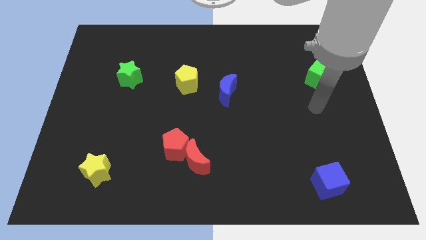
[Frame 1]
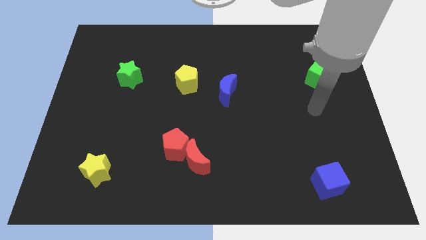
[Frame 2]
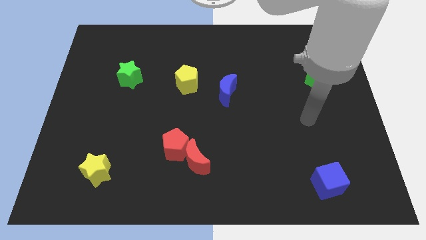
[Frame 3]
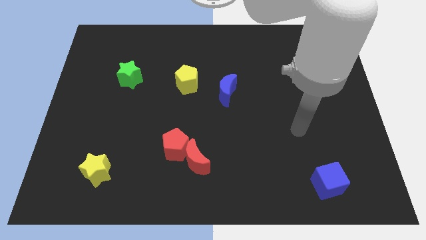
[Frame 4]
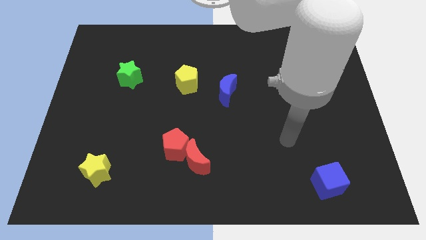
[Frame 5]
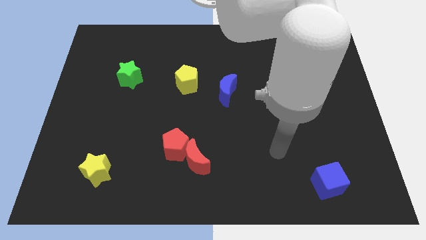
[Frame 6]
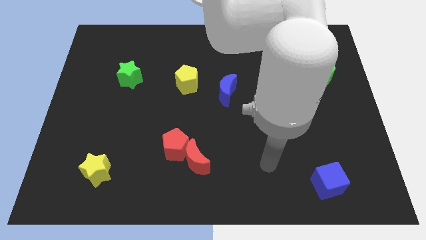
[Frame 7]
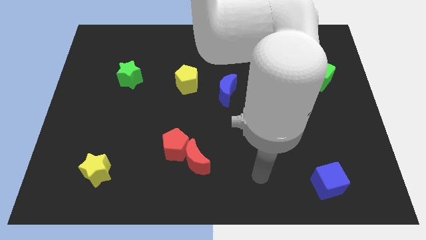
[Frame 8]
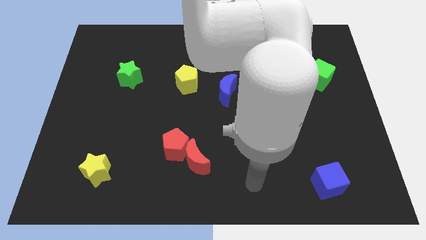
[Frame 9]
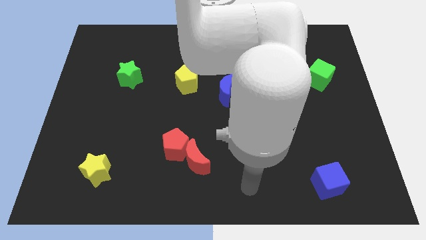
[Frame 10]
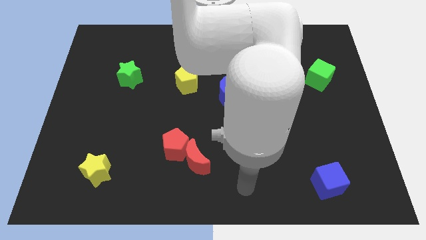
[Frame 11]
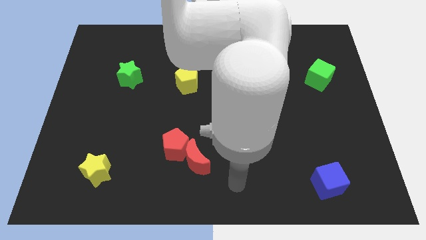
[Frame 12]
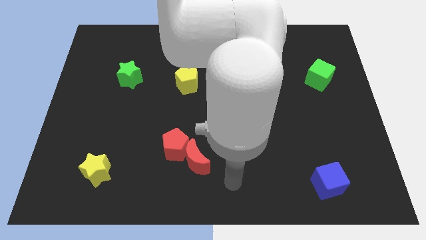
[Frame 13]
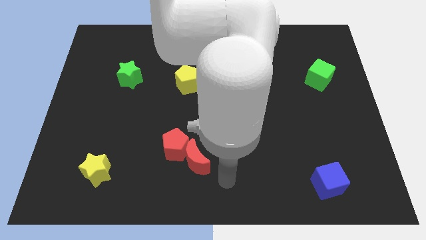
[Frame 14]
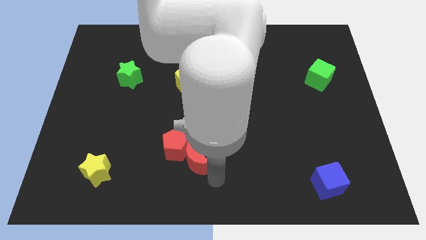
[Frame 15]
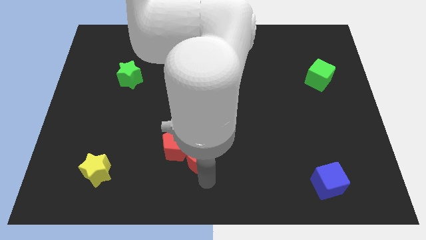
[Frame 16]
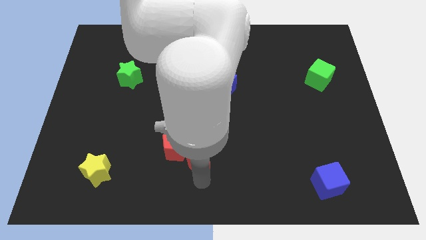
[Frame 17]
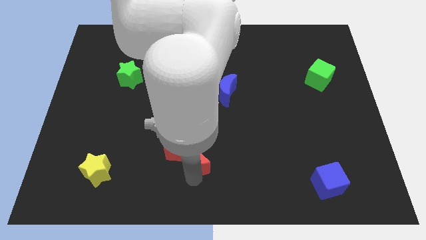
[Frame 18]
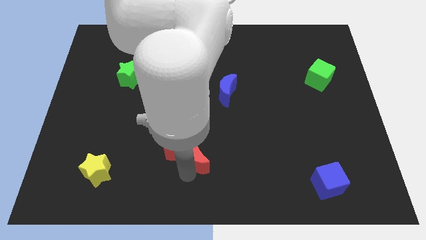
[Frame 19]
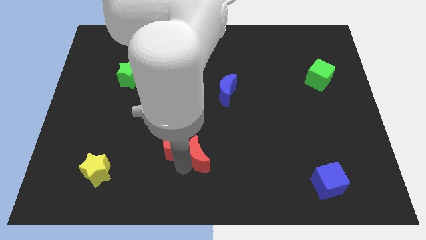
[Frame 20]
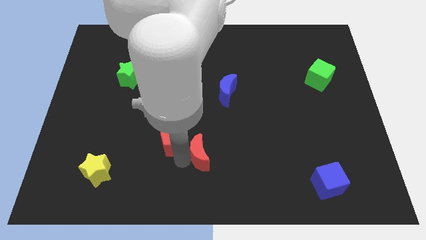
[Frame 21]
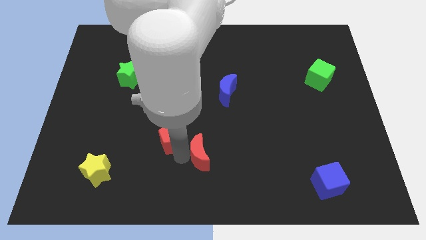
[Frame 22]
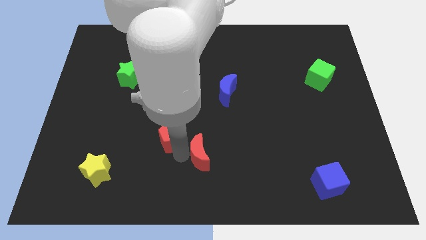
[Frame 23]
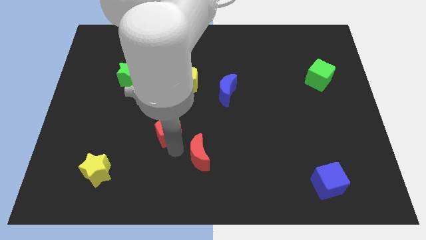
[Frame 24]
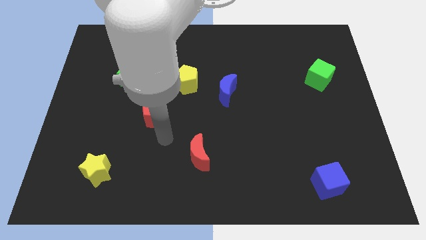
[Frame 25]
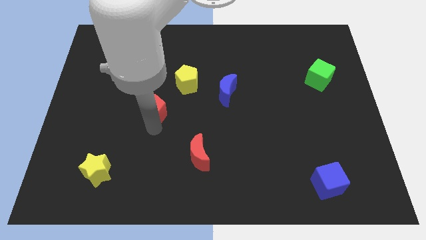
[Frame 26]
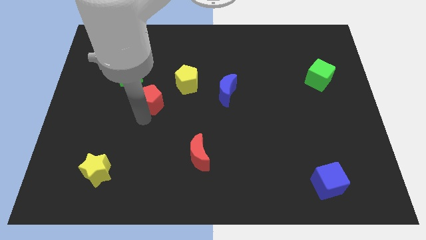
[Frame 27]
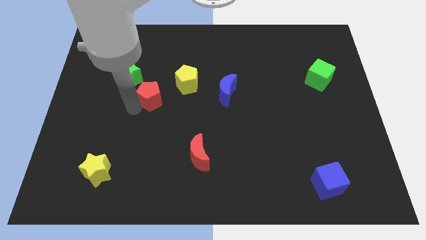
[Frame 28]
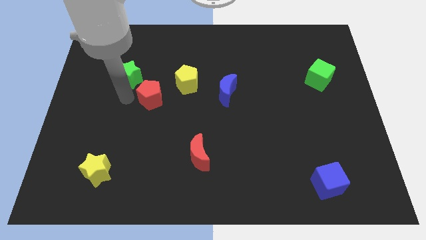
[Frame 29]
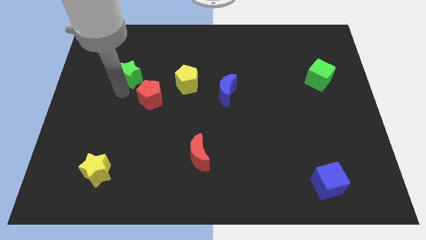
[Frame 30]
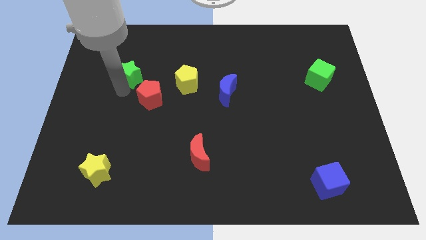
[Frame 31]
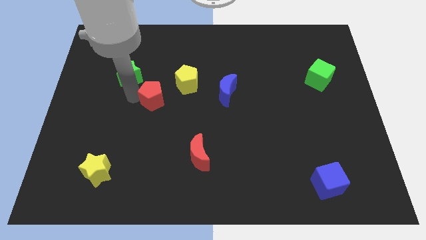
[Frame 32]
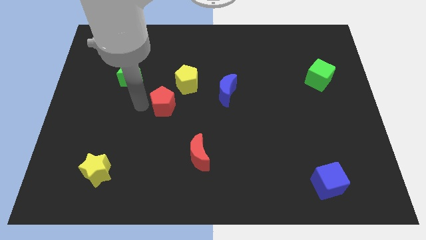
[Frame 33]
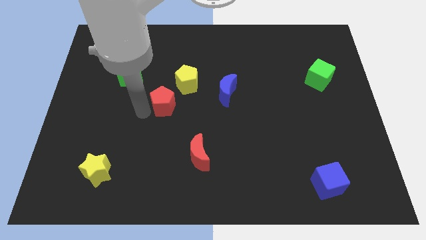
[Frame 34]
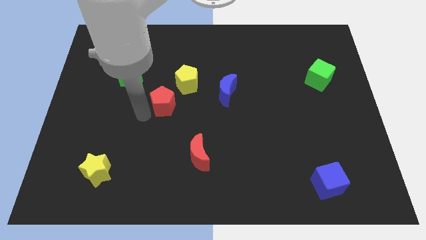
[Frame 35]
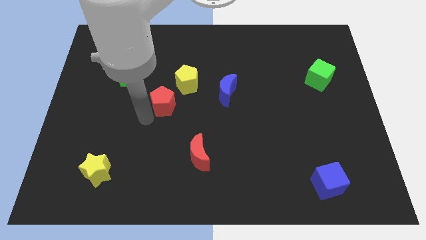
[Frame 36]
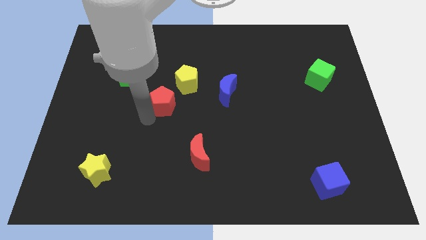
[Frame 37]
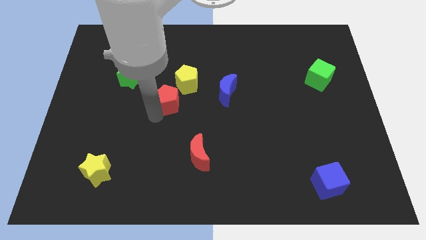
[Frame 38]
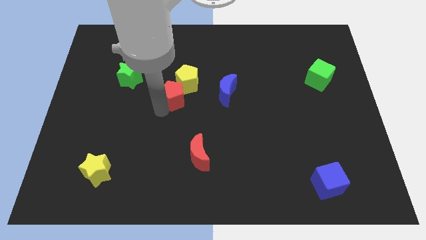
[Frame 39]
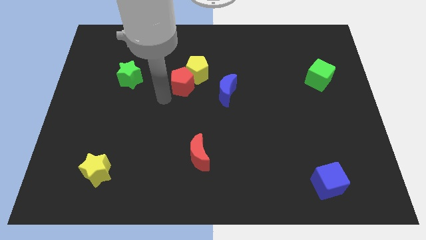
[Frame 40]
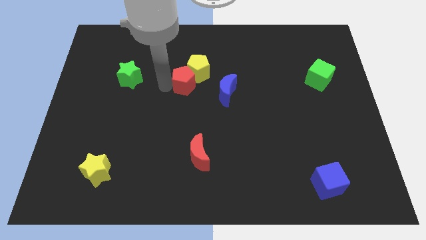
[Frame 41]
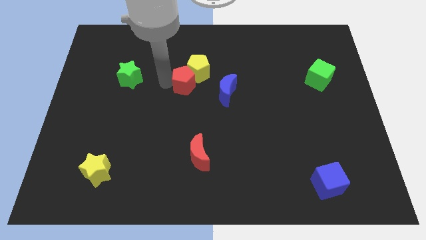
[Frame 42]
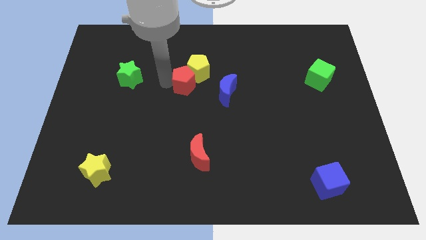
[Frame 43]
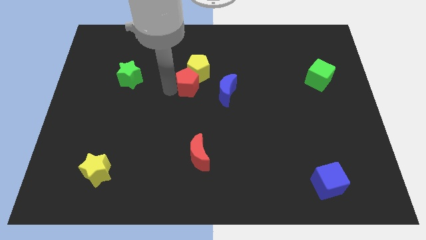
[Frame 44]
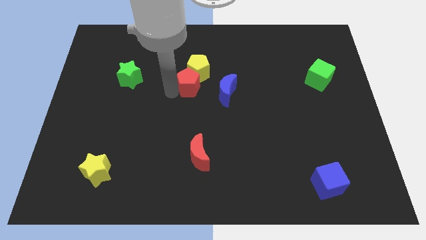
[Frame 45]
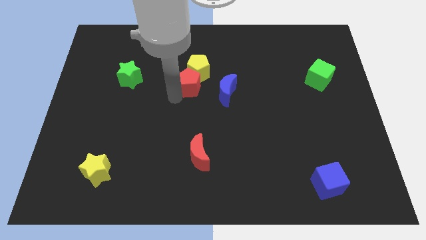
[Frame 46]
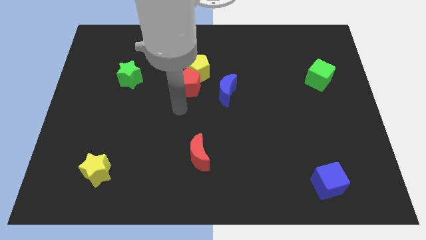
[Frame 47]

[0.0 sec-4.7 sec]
push the red pentagon into the yellow pentagon

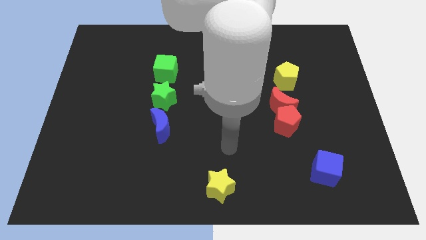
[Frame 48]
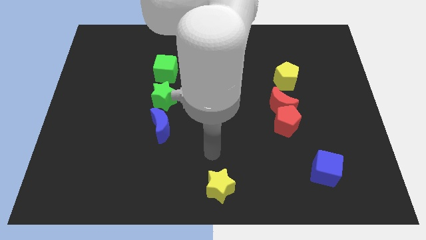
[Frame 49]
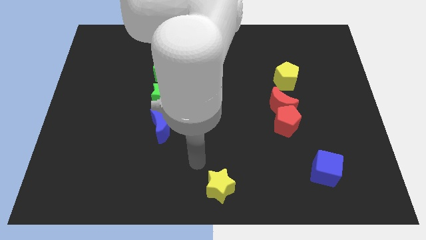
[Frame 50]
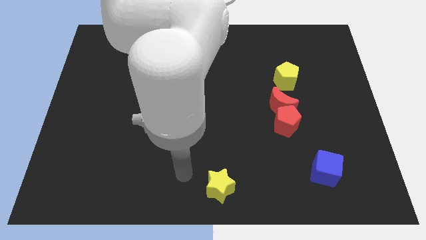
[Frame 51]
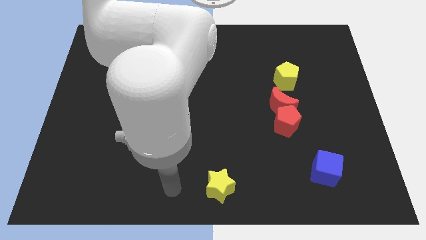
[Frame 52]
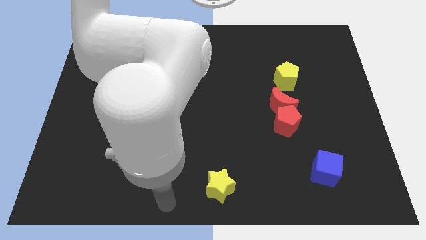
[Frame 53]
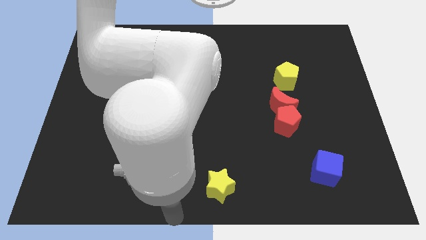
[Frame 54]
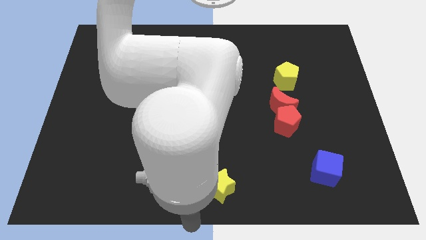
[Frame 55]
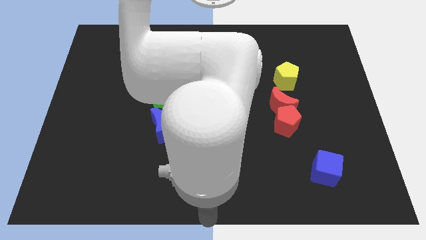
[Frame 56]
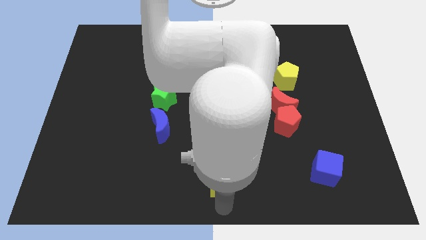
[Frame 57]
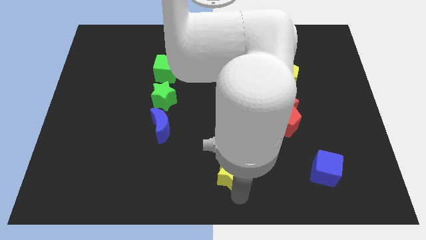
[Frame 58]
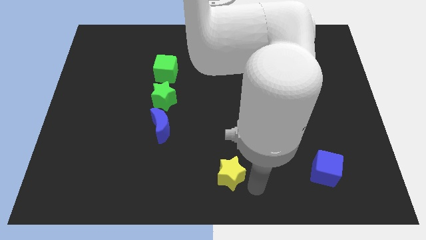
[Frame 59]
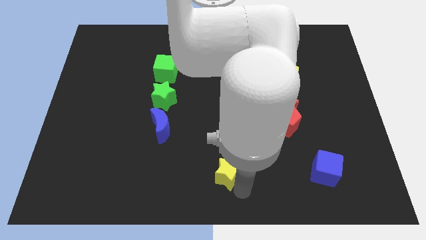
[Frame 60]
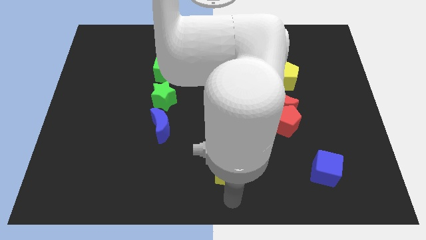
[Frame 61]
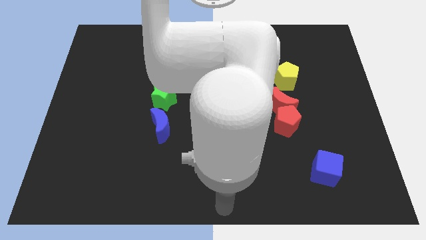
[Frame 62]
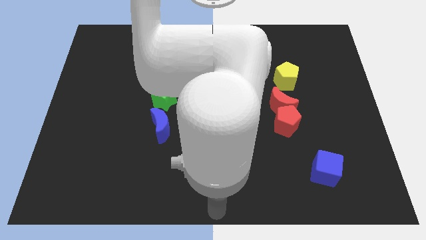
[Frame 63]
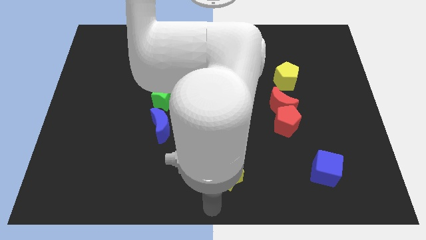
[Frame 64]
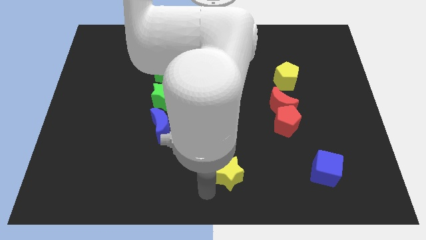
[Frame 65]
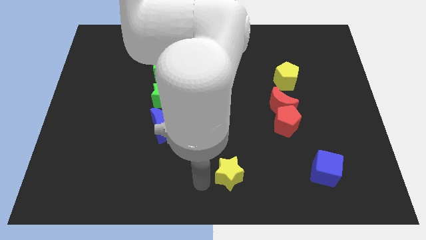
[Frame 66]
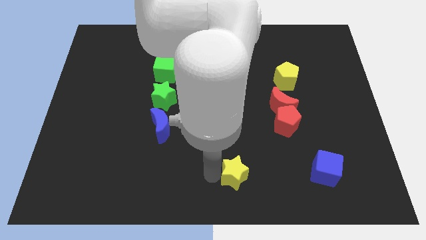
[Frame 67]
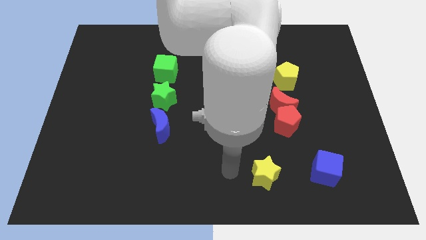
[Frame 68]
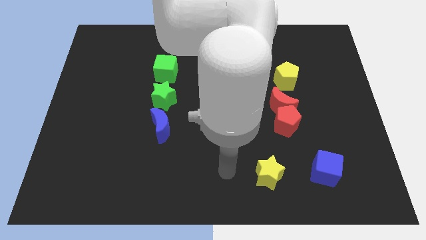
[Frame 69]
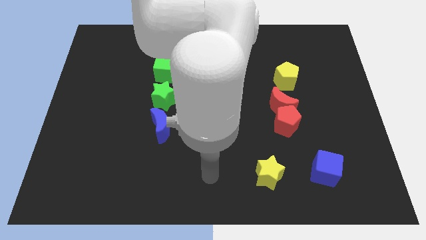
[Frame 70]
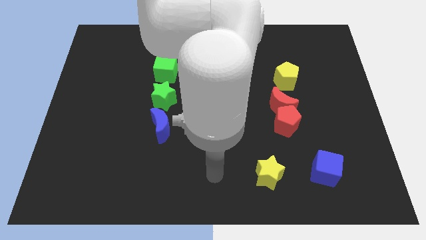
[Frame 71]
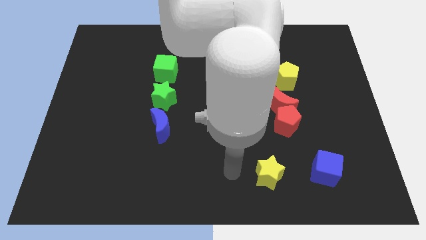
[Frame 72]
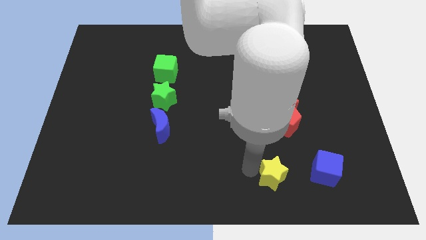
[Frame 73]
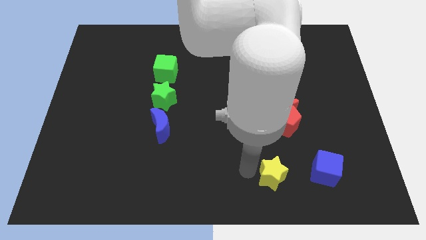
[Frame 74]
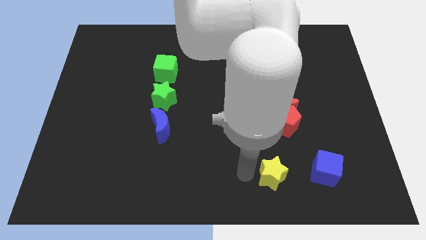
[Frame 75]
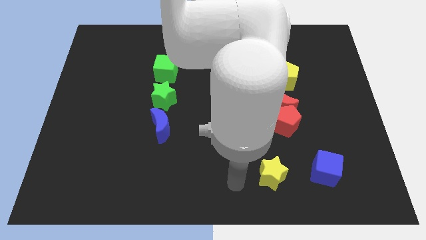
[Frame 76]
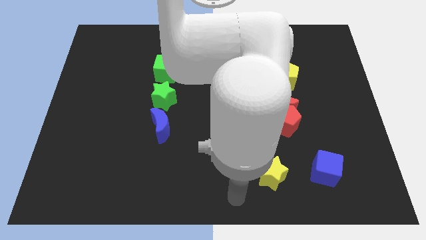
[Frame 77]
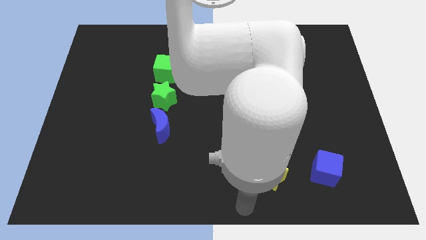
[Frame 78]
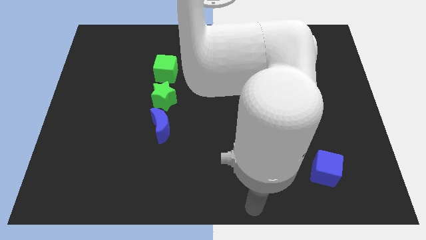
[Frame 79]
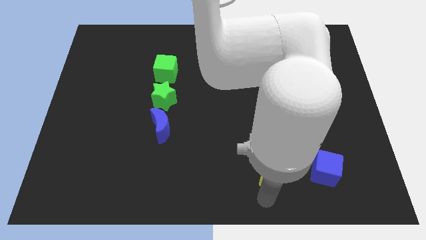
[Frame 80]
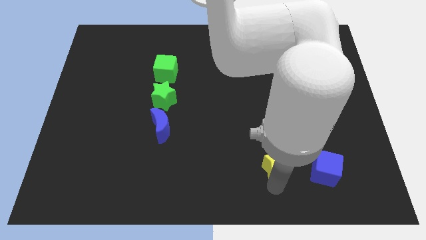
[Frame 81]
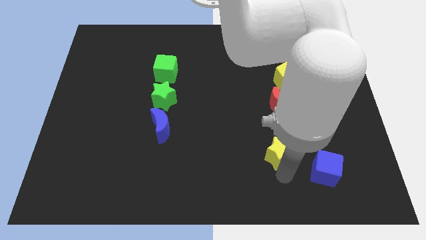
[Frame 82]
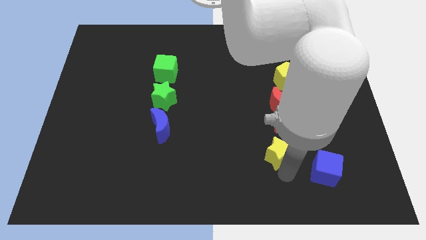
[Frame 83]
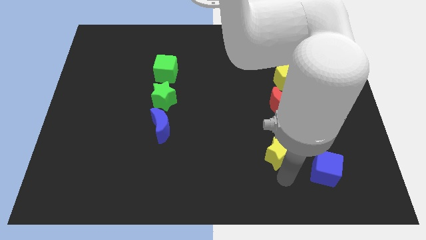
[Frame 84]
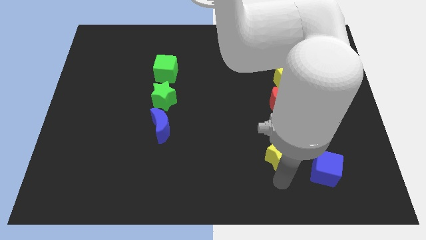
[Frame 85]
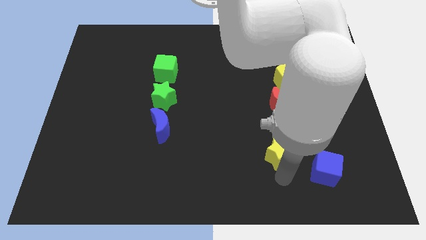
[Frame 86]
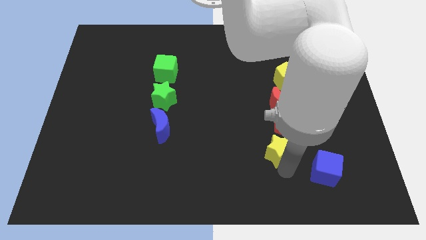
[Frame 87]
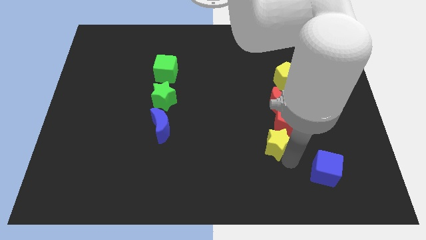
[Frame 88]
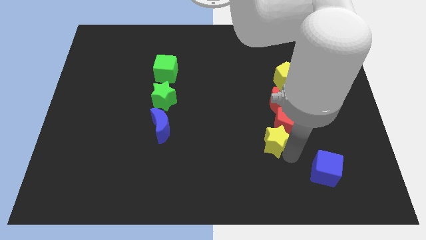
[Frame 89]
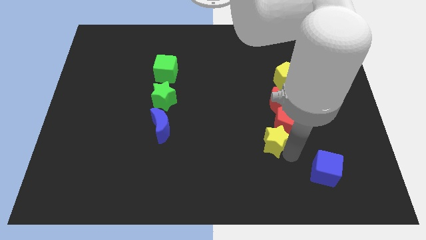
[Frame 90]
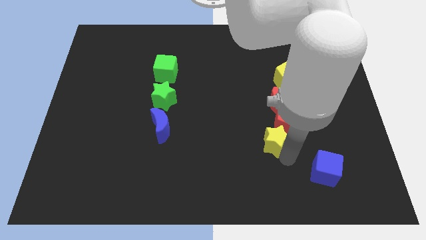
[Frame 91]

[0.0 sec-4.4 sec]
place yellow star to the bottom of red pentagon
